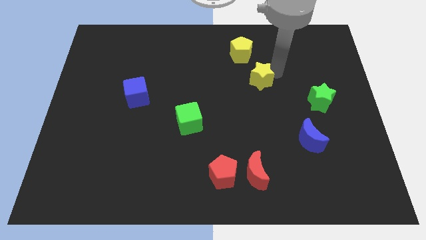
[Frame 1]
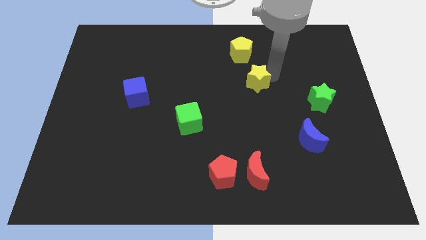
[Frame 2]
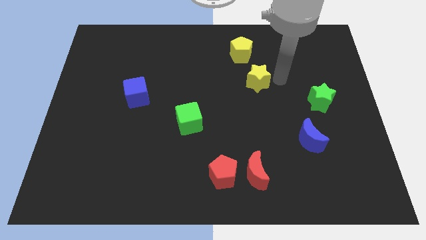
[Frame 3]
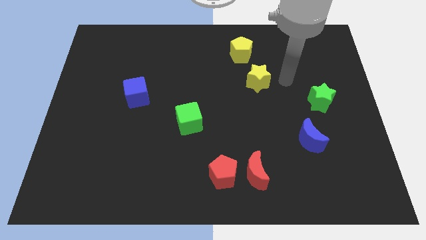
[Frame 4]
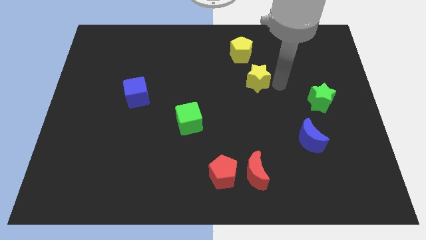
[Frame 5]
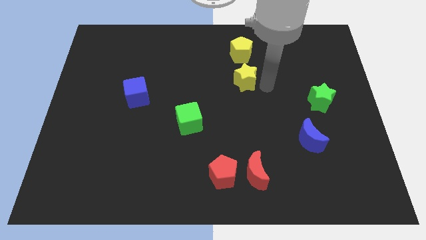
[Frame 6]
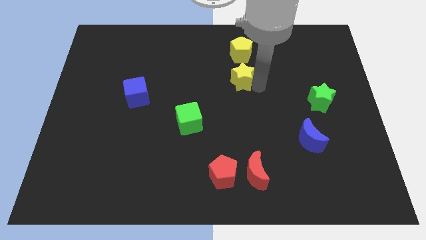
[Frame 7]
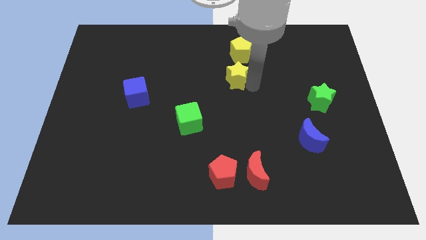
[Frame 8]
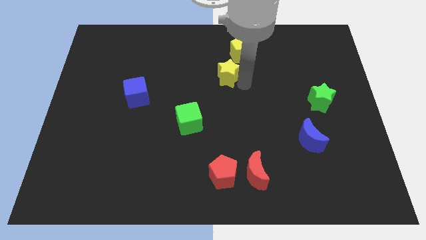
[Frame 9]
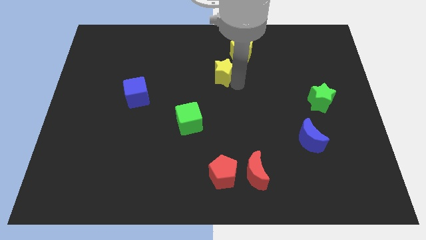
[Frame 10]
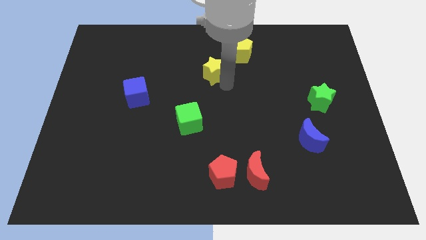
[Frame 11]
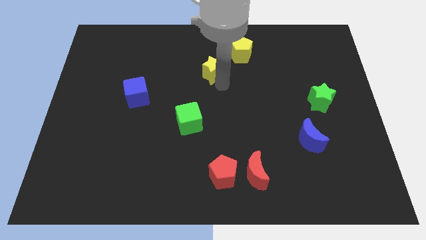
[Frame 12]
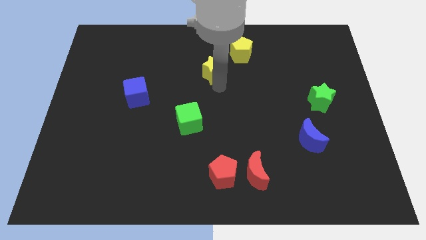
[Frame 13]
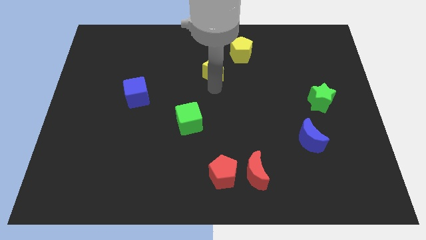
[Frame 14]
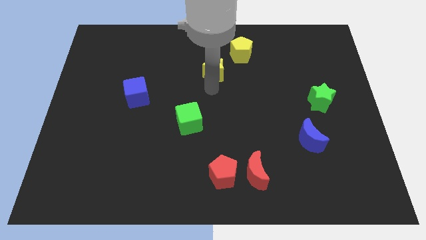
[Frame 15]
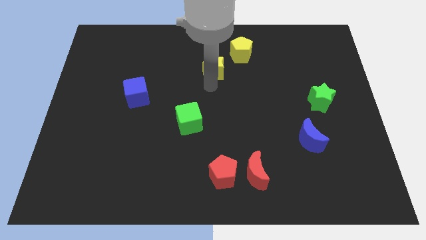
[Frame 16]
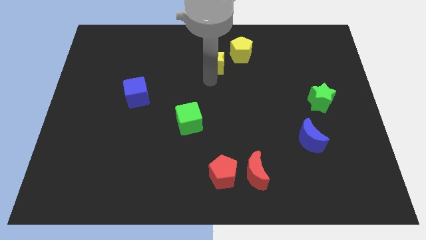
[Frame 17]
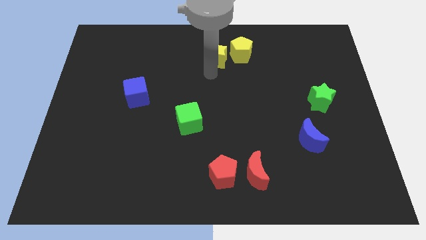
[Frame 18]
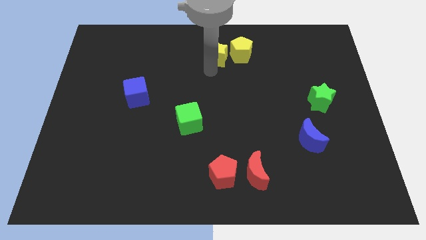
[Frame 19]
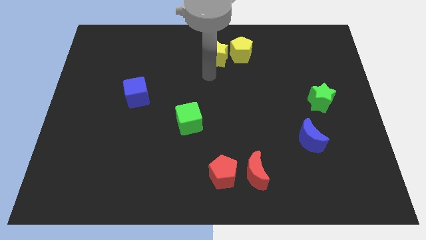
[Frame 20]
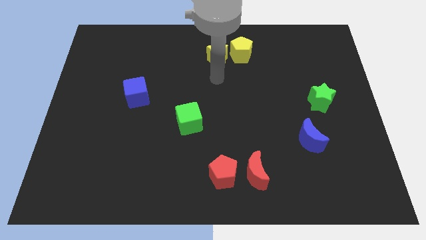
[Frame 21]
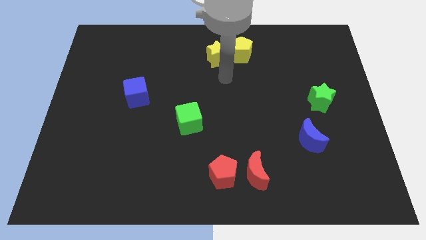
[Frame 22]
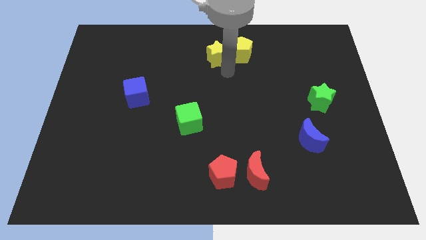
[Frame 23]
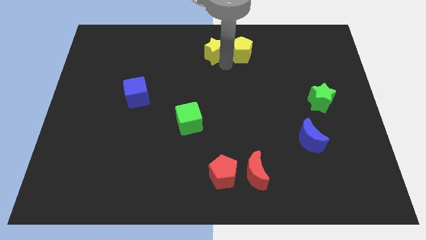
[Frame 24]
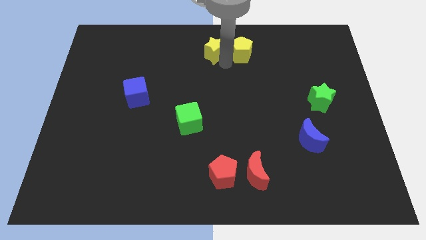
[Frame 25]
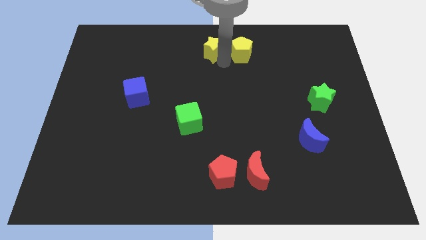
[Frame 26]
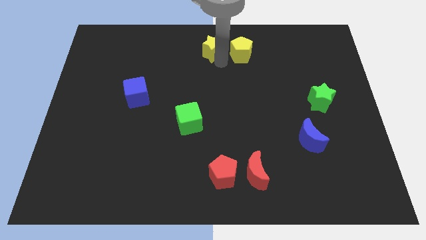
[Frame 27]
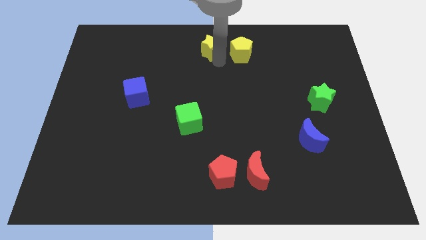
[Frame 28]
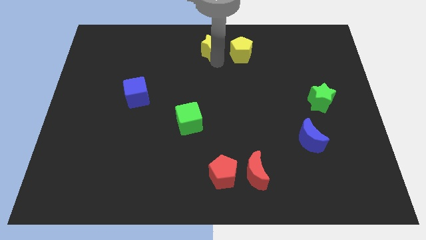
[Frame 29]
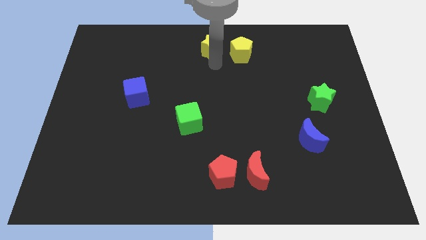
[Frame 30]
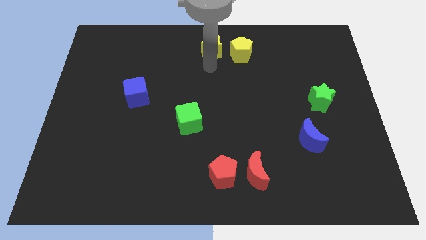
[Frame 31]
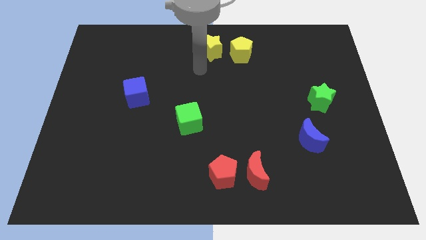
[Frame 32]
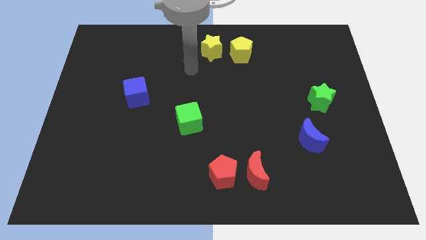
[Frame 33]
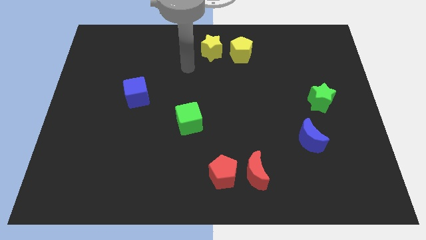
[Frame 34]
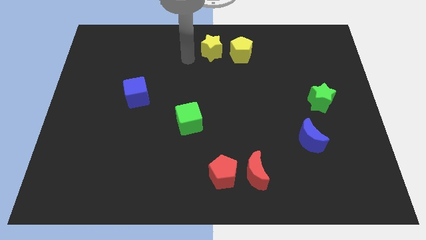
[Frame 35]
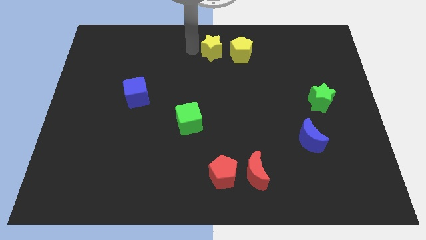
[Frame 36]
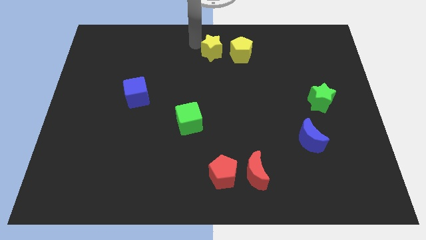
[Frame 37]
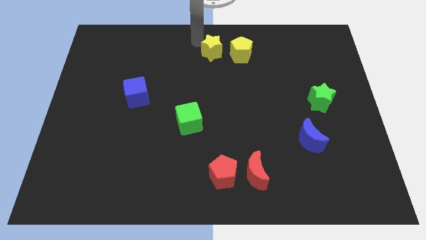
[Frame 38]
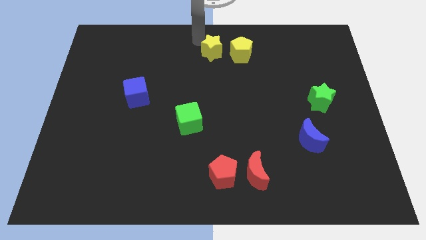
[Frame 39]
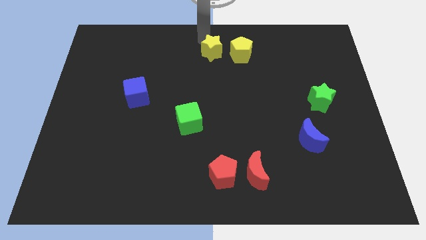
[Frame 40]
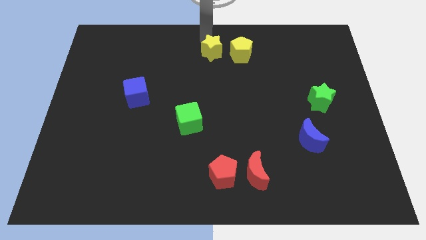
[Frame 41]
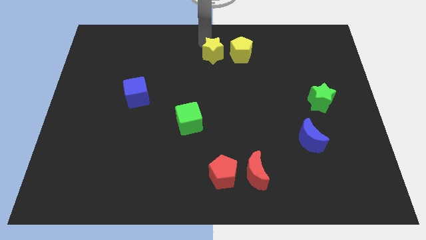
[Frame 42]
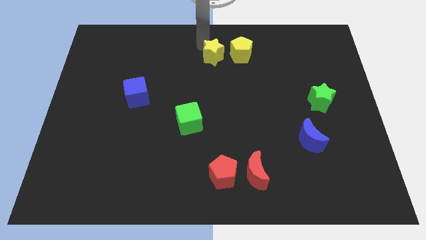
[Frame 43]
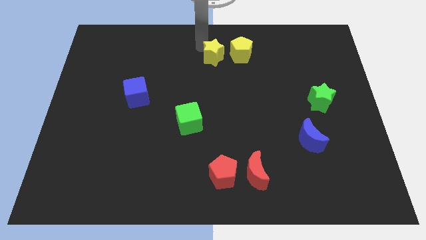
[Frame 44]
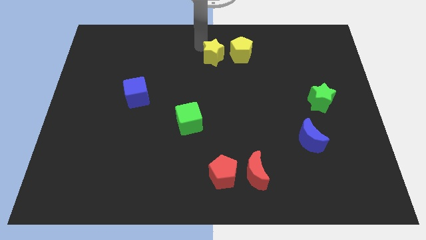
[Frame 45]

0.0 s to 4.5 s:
move the yellow star to the left of the yellow pentagon

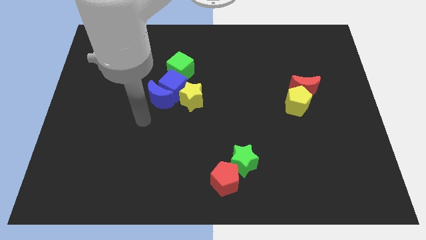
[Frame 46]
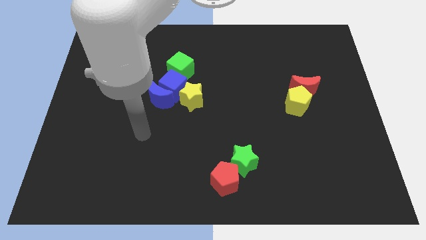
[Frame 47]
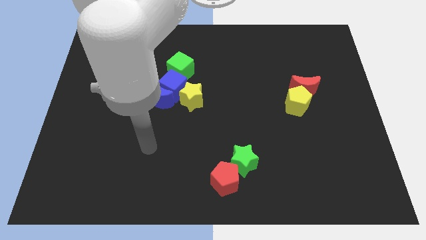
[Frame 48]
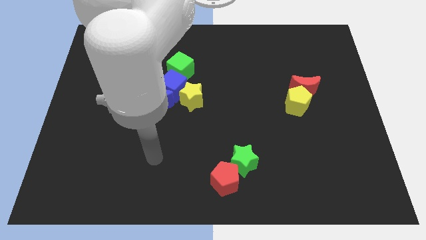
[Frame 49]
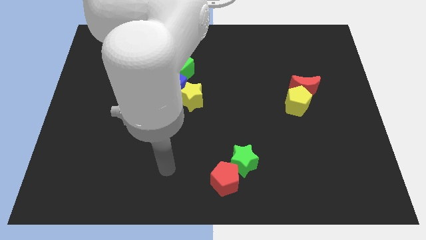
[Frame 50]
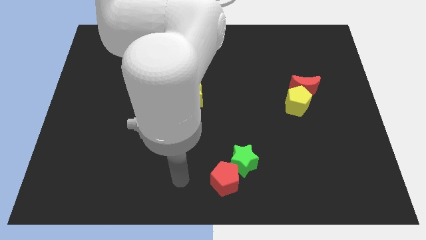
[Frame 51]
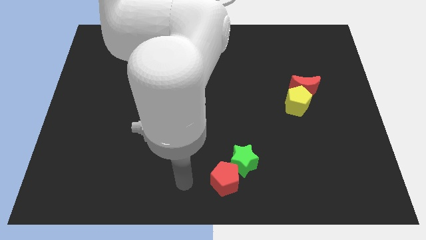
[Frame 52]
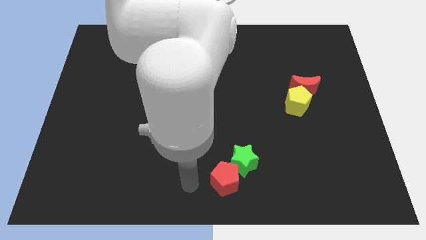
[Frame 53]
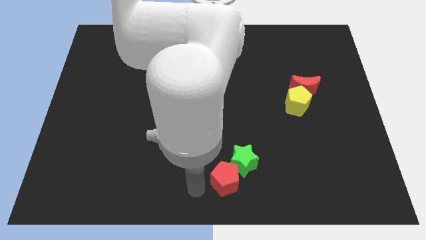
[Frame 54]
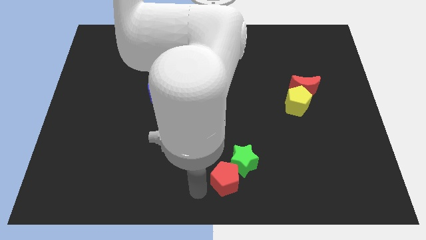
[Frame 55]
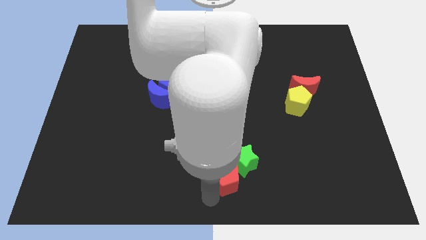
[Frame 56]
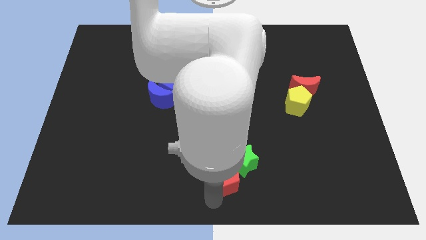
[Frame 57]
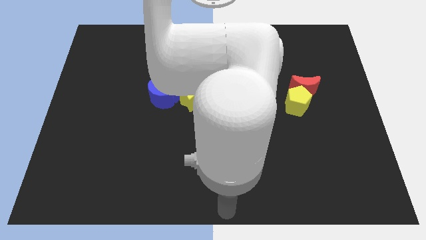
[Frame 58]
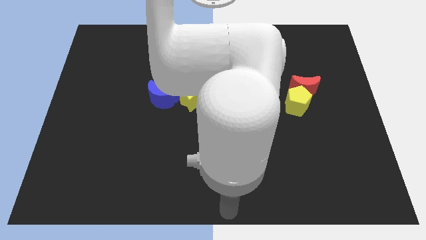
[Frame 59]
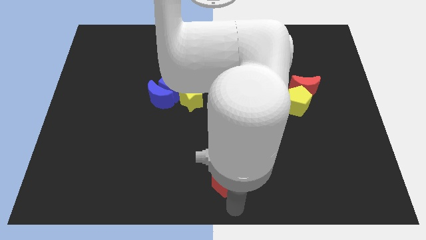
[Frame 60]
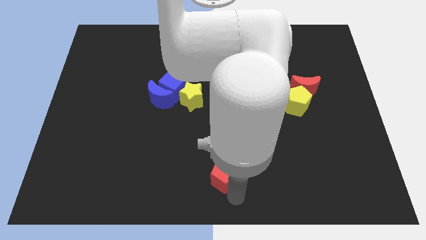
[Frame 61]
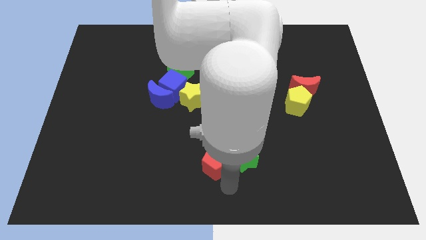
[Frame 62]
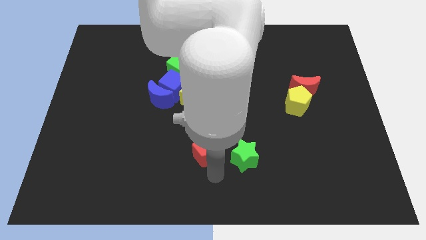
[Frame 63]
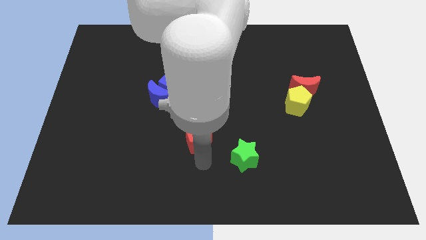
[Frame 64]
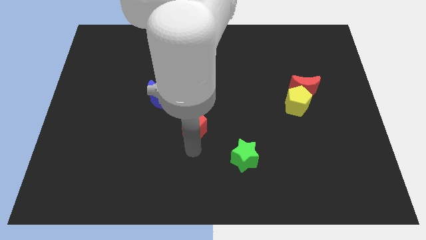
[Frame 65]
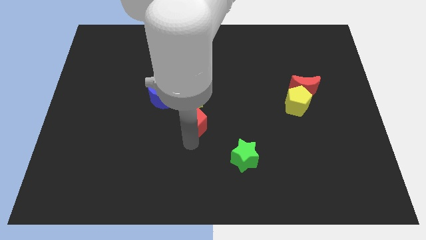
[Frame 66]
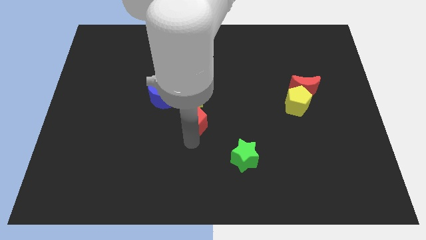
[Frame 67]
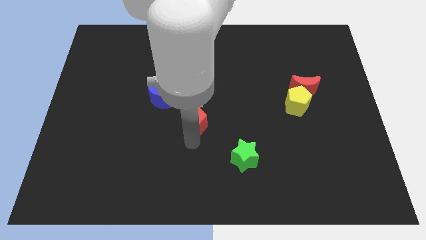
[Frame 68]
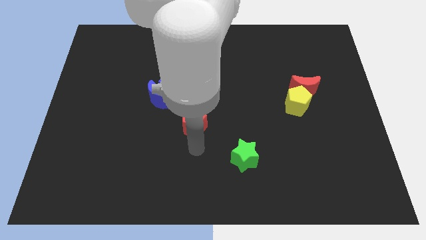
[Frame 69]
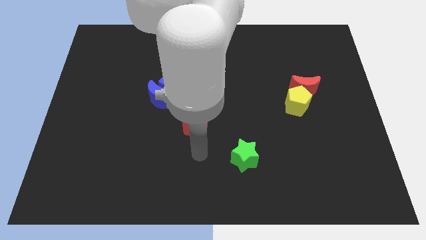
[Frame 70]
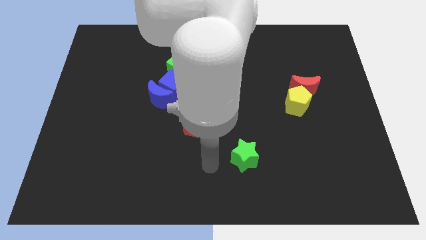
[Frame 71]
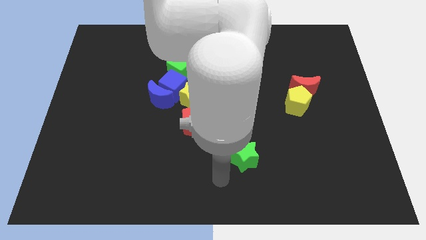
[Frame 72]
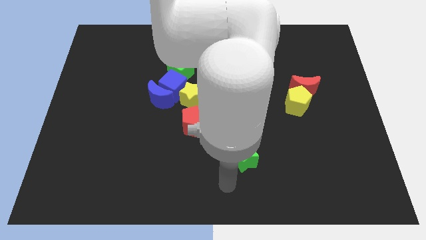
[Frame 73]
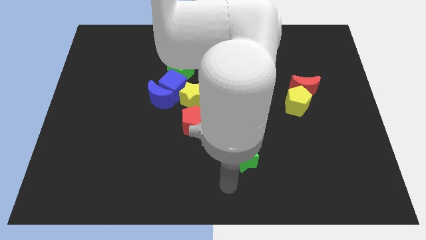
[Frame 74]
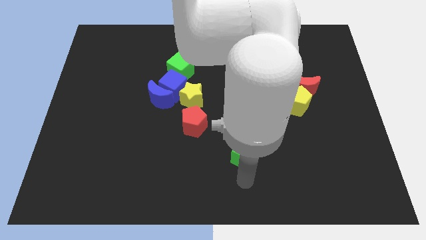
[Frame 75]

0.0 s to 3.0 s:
separate the red pentagon from the green star

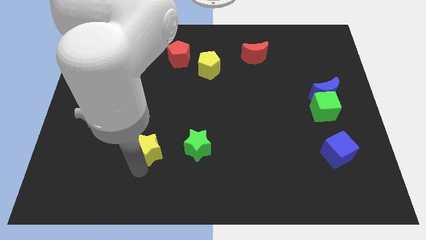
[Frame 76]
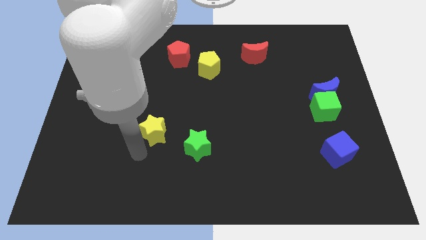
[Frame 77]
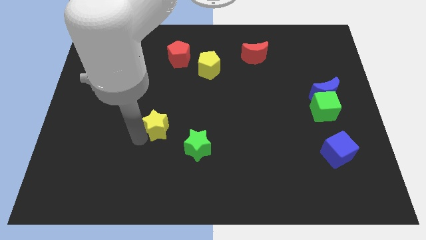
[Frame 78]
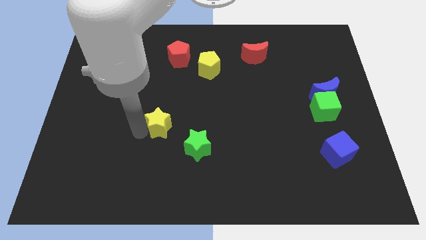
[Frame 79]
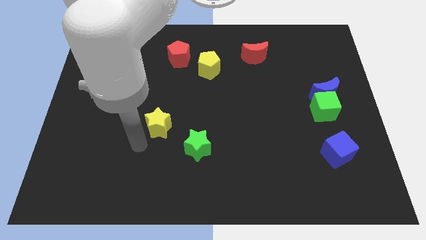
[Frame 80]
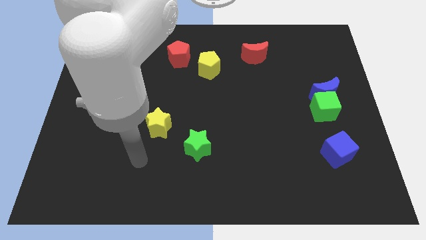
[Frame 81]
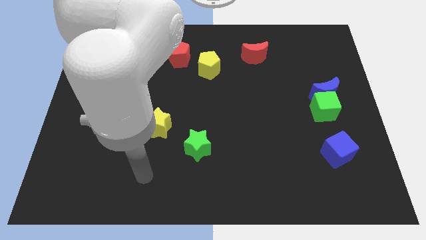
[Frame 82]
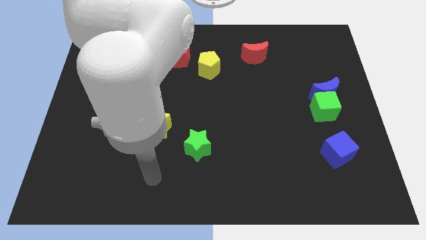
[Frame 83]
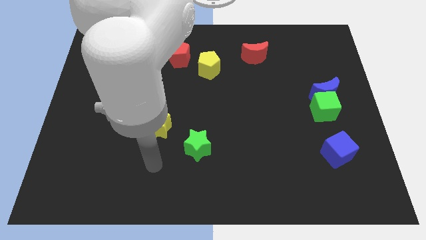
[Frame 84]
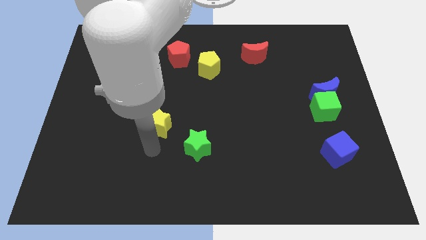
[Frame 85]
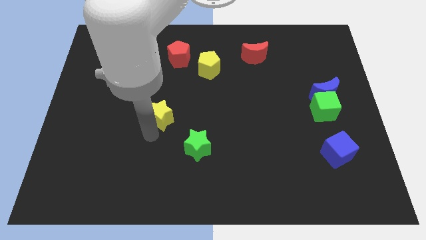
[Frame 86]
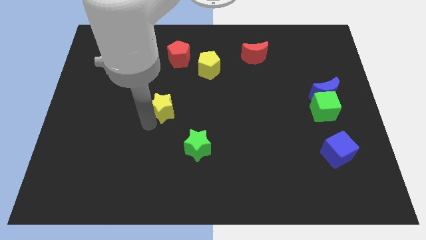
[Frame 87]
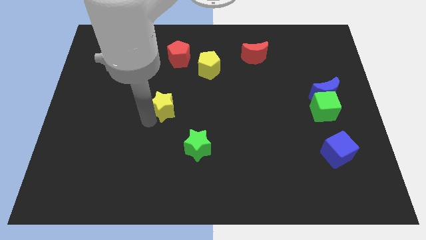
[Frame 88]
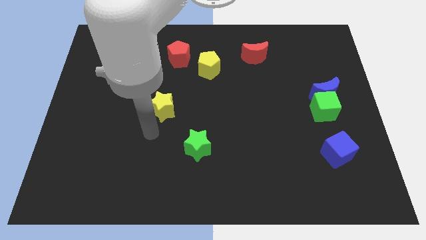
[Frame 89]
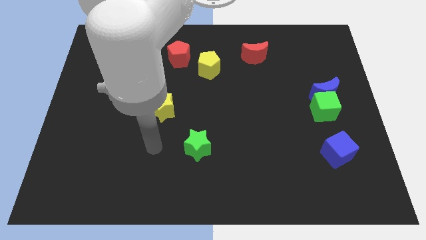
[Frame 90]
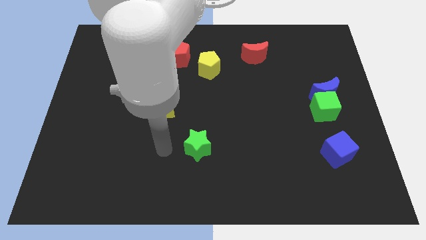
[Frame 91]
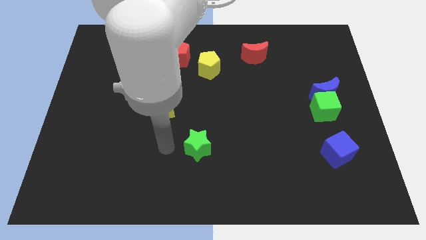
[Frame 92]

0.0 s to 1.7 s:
drag the yellow star diagonally on the top left side of the green star
